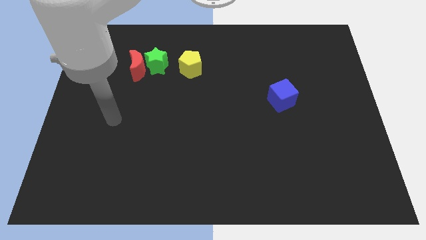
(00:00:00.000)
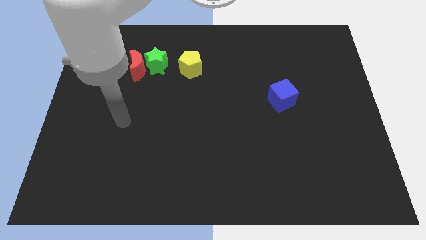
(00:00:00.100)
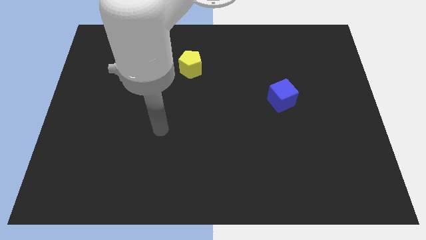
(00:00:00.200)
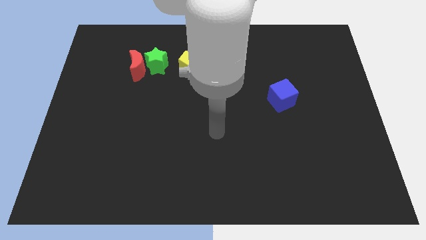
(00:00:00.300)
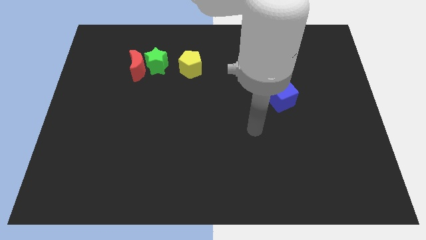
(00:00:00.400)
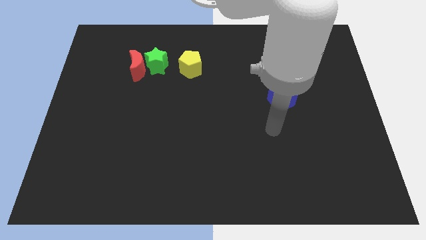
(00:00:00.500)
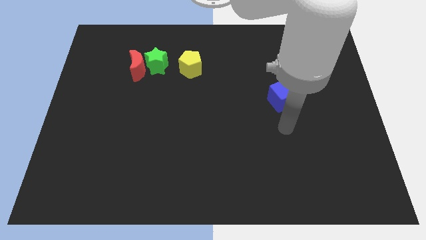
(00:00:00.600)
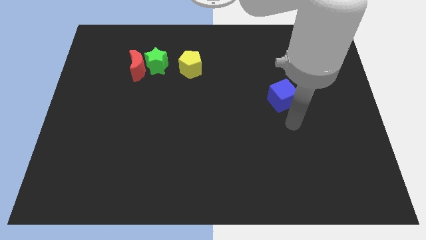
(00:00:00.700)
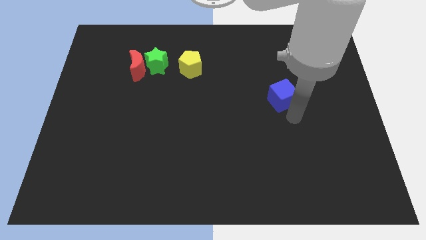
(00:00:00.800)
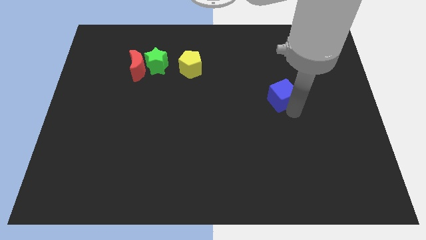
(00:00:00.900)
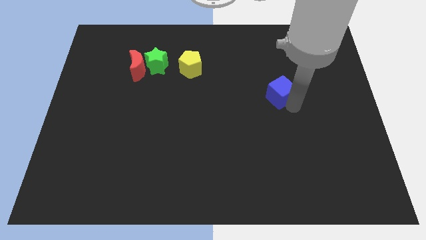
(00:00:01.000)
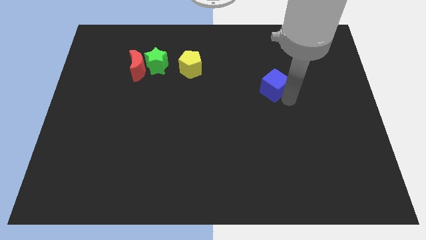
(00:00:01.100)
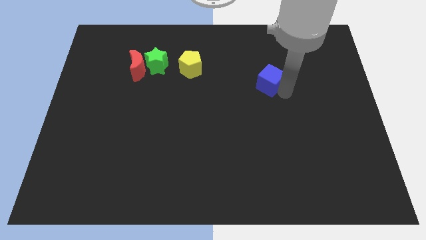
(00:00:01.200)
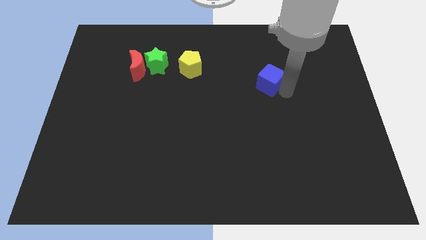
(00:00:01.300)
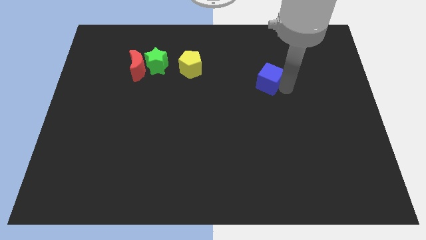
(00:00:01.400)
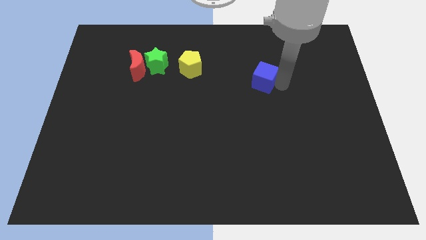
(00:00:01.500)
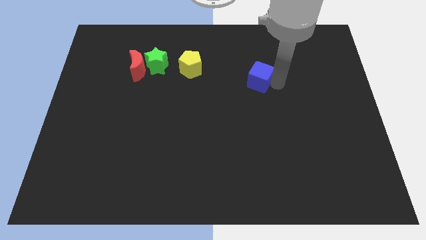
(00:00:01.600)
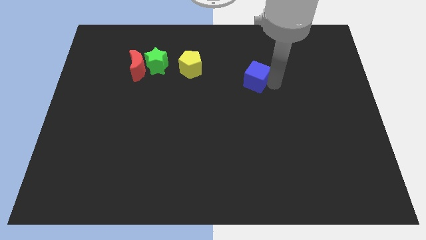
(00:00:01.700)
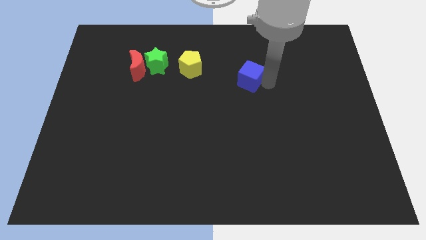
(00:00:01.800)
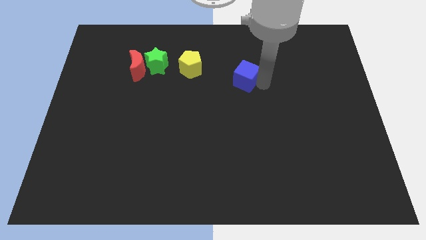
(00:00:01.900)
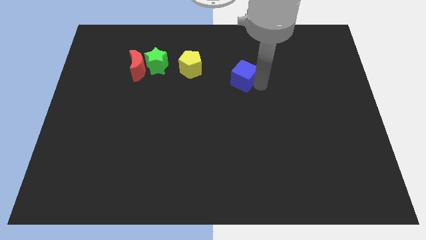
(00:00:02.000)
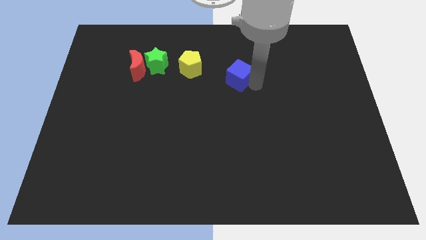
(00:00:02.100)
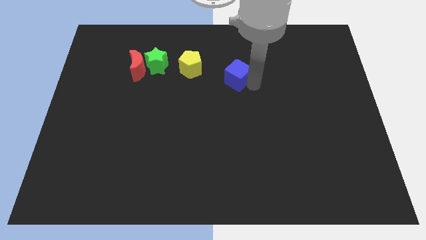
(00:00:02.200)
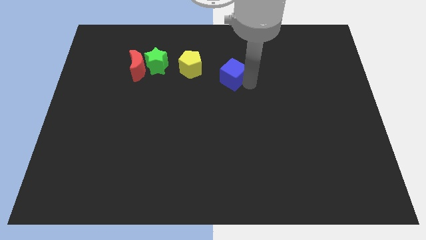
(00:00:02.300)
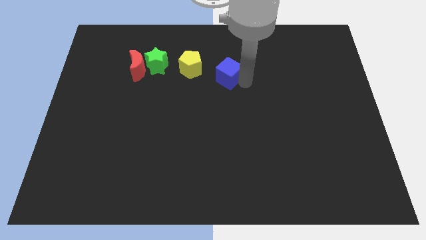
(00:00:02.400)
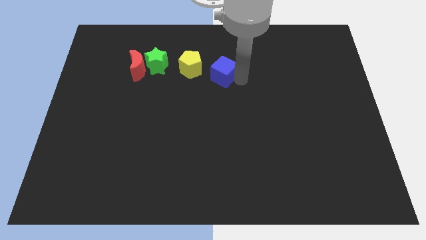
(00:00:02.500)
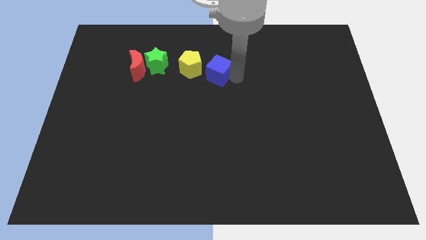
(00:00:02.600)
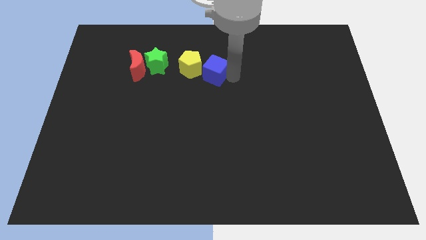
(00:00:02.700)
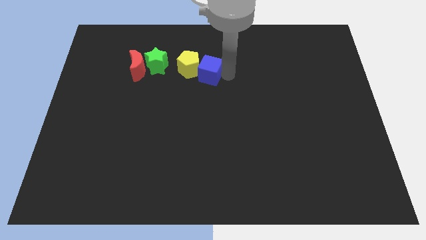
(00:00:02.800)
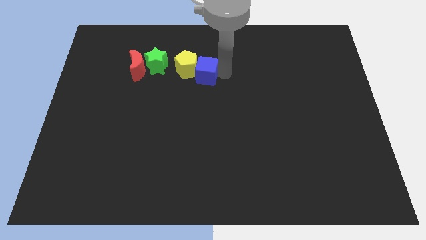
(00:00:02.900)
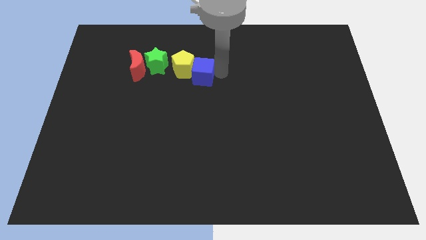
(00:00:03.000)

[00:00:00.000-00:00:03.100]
move the cube to the pentagon

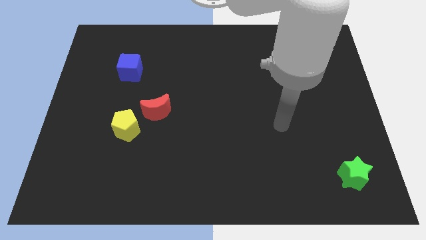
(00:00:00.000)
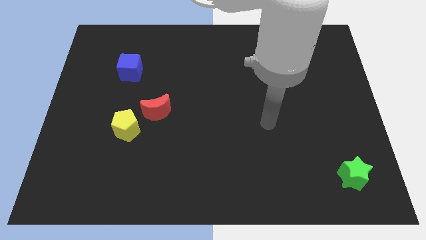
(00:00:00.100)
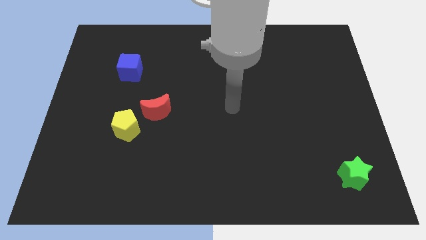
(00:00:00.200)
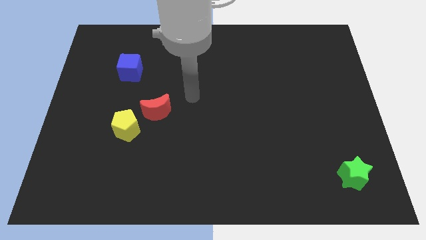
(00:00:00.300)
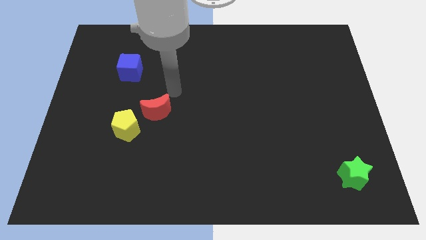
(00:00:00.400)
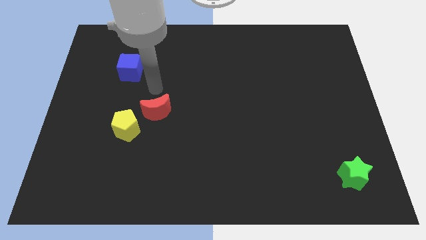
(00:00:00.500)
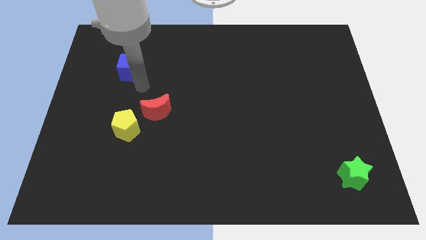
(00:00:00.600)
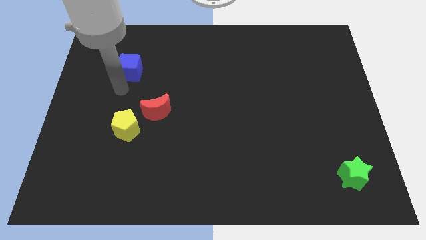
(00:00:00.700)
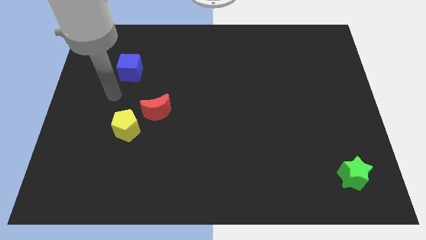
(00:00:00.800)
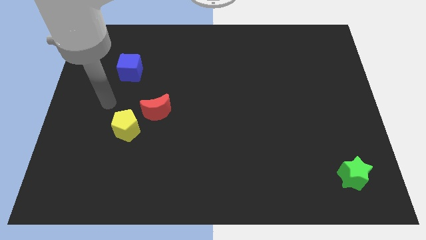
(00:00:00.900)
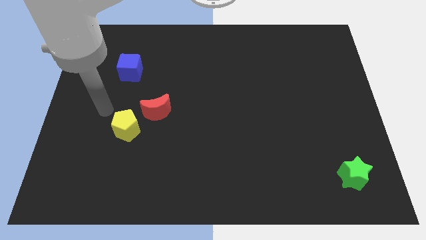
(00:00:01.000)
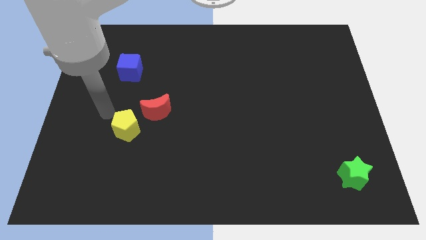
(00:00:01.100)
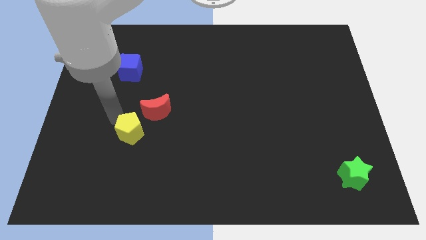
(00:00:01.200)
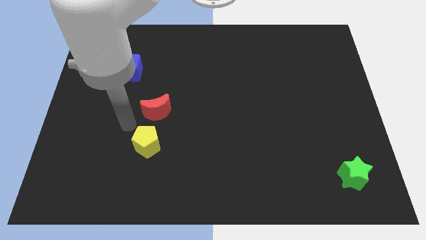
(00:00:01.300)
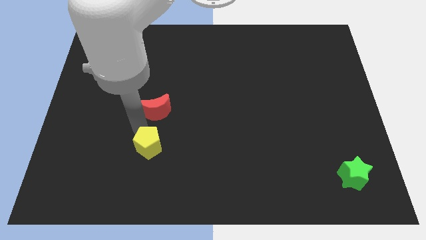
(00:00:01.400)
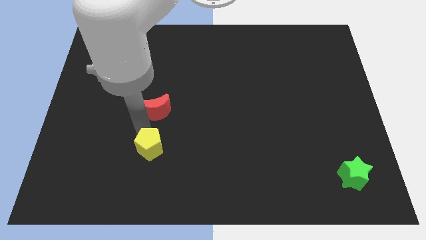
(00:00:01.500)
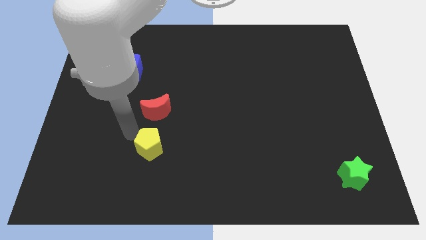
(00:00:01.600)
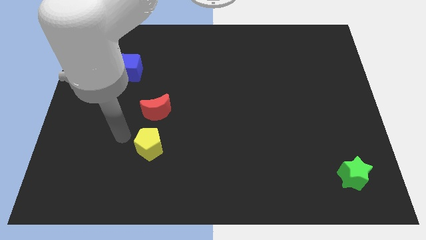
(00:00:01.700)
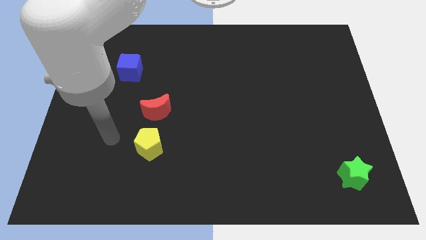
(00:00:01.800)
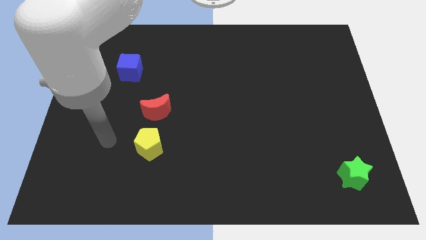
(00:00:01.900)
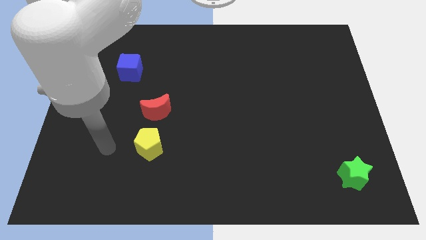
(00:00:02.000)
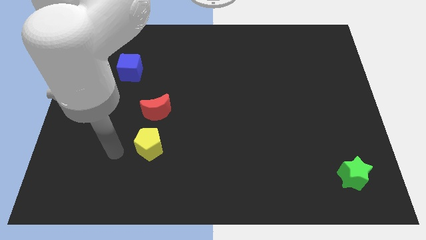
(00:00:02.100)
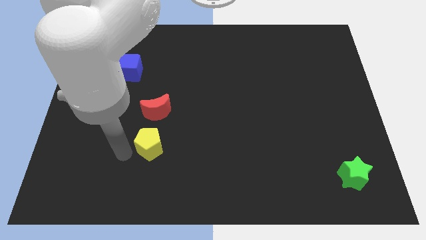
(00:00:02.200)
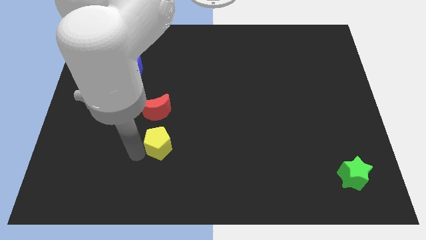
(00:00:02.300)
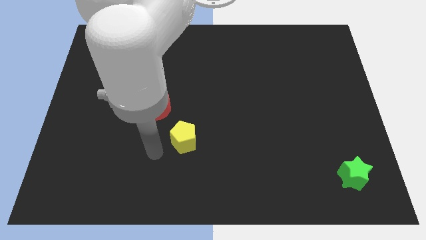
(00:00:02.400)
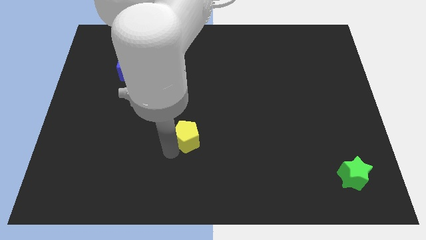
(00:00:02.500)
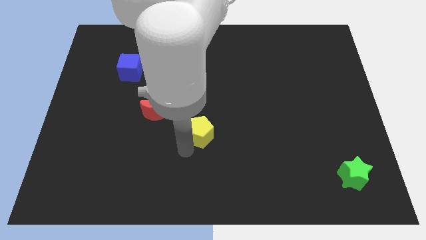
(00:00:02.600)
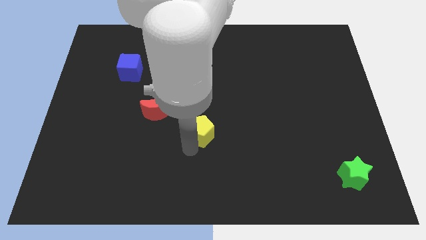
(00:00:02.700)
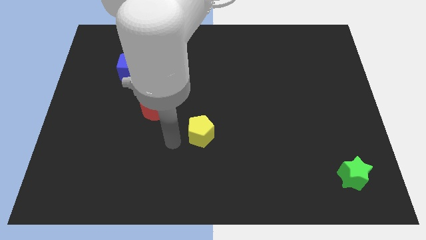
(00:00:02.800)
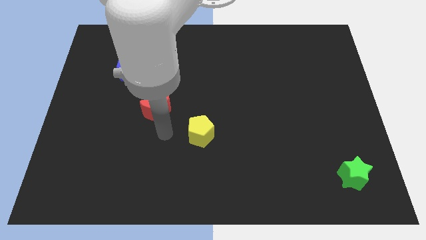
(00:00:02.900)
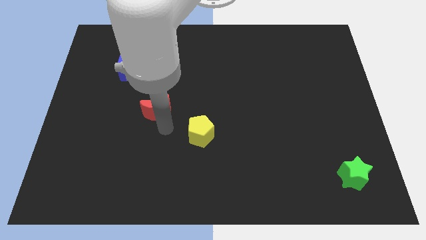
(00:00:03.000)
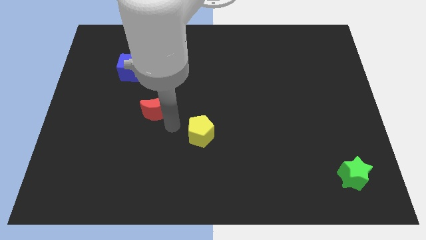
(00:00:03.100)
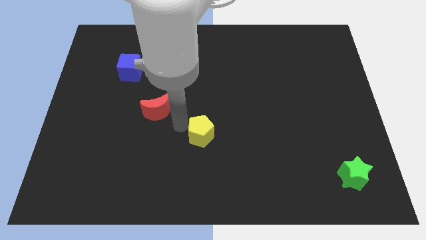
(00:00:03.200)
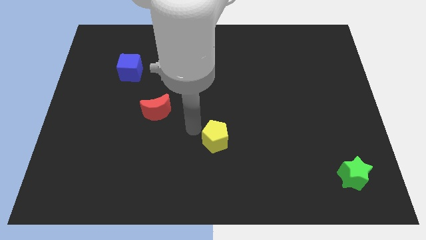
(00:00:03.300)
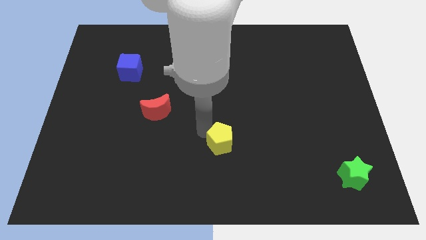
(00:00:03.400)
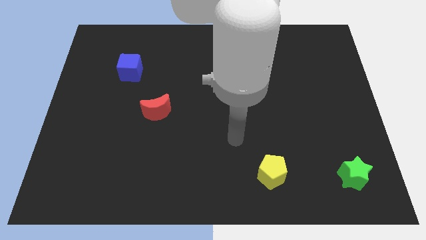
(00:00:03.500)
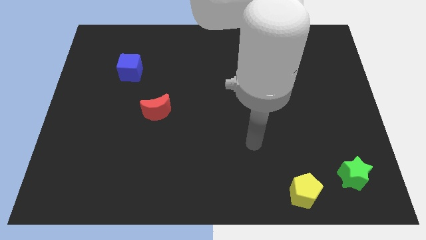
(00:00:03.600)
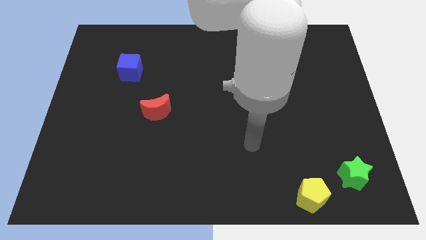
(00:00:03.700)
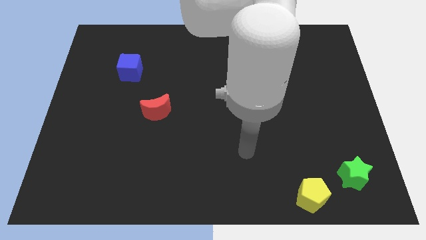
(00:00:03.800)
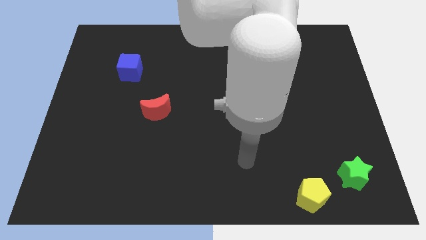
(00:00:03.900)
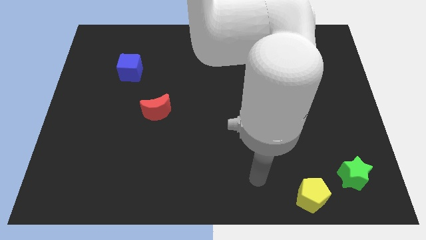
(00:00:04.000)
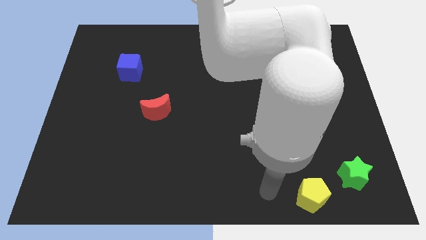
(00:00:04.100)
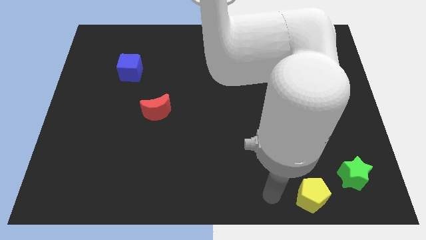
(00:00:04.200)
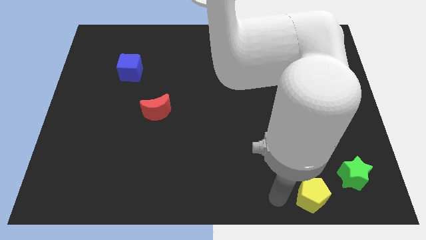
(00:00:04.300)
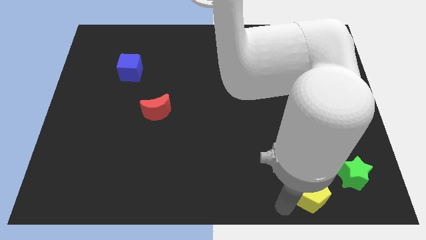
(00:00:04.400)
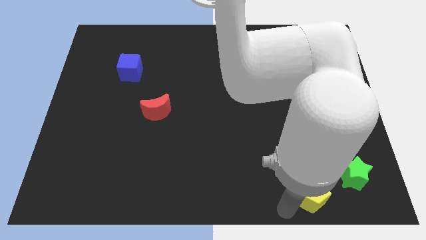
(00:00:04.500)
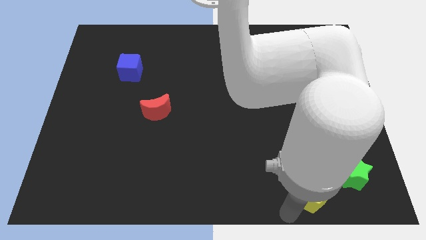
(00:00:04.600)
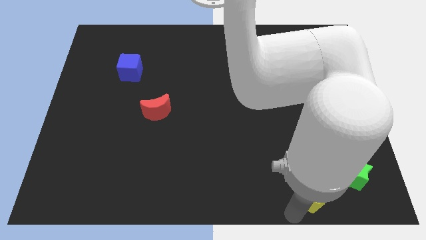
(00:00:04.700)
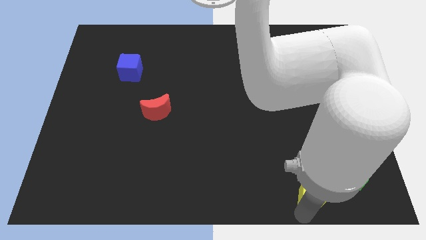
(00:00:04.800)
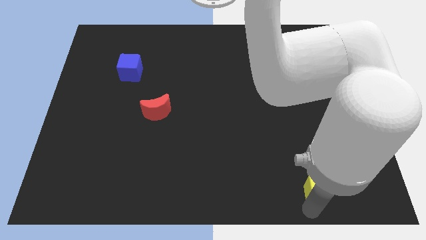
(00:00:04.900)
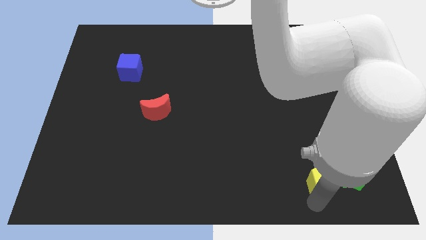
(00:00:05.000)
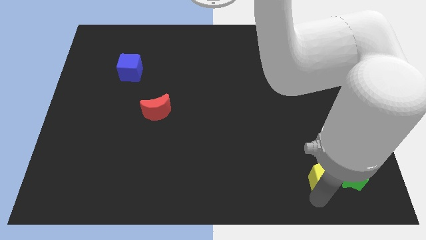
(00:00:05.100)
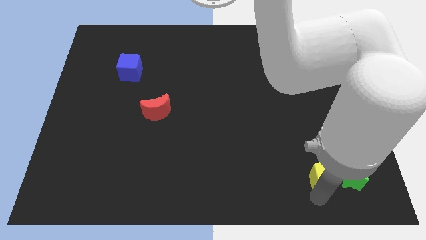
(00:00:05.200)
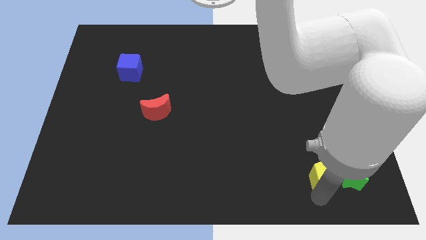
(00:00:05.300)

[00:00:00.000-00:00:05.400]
put the yellow block towards the green star
